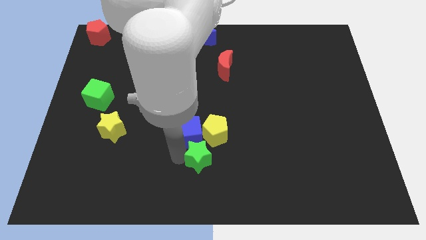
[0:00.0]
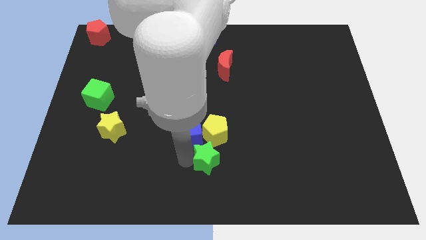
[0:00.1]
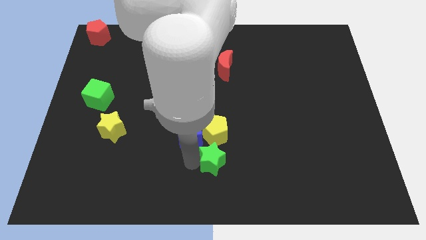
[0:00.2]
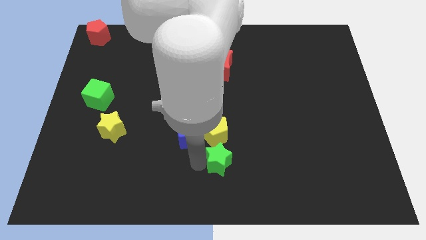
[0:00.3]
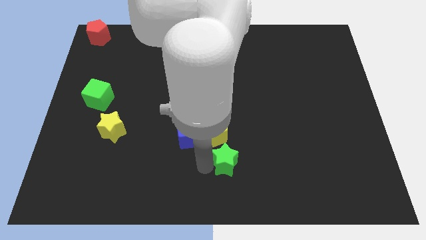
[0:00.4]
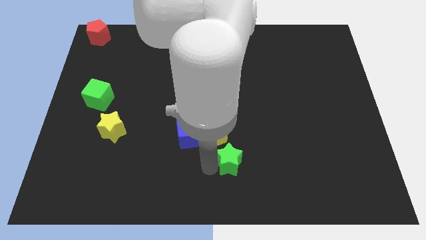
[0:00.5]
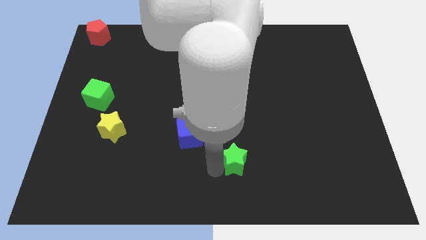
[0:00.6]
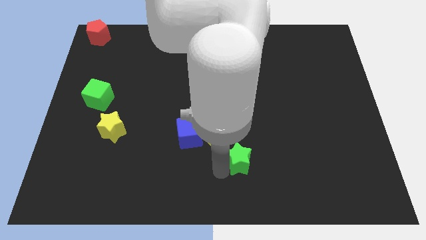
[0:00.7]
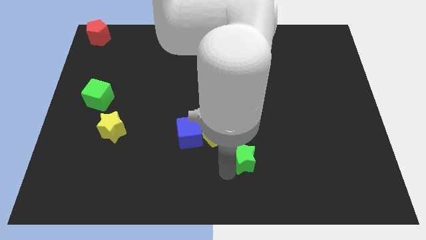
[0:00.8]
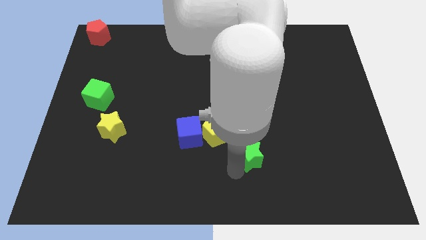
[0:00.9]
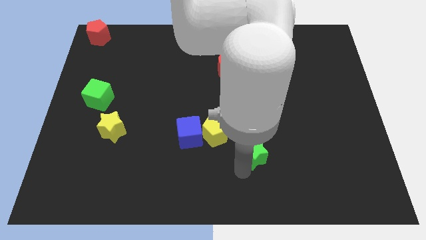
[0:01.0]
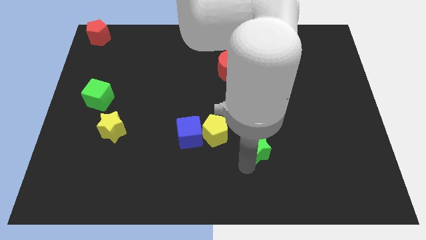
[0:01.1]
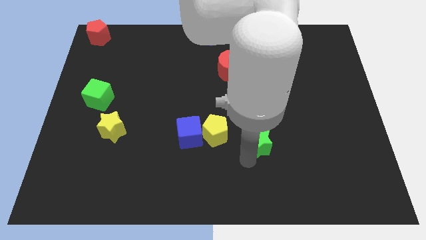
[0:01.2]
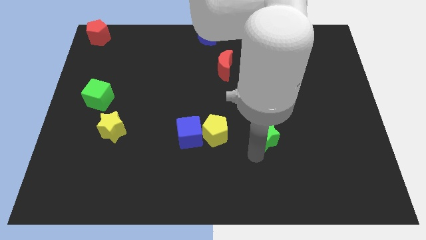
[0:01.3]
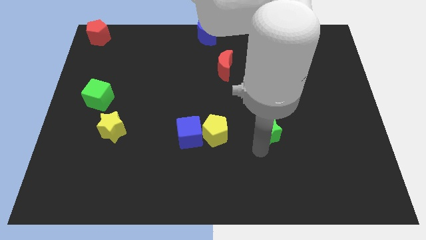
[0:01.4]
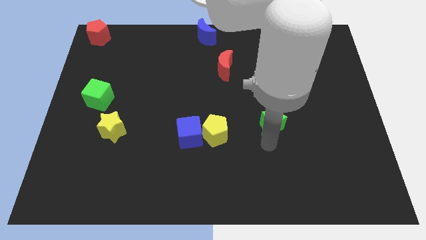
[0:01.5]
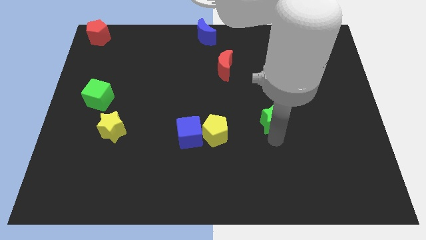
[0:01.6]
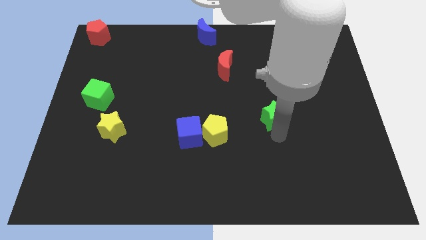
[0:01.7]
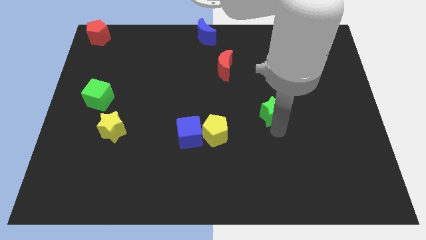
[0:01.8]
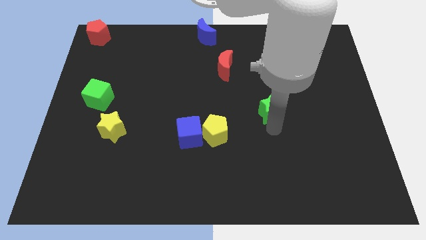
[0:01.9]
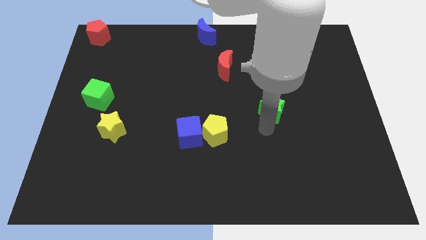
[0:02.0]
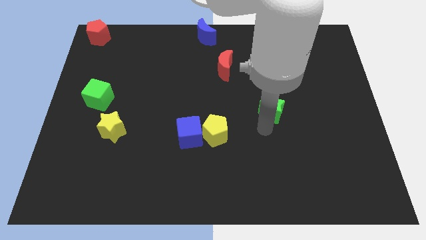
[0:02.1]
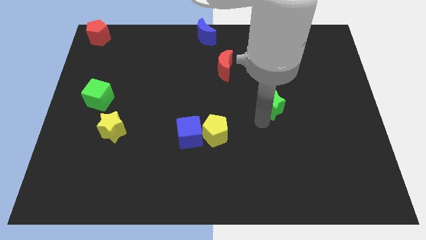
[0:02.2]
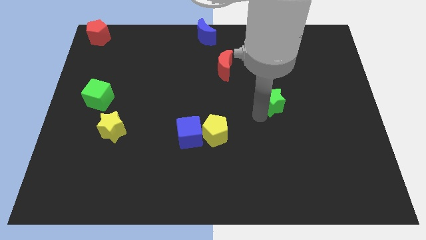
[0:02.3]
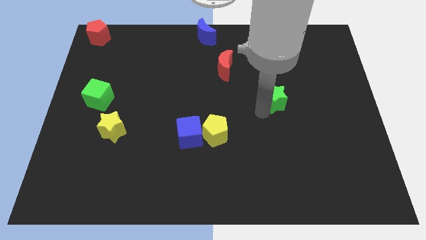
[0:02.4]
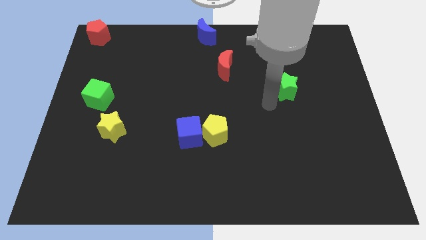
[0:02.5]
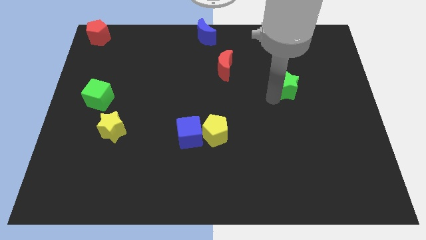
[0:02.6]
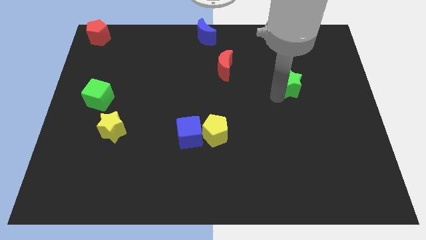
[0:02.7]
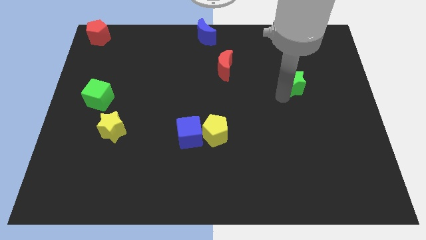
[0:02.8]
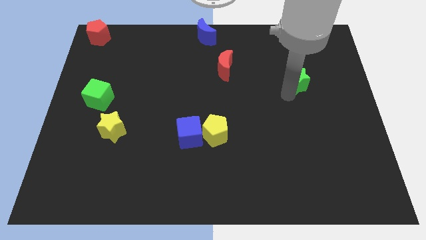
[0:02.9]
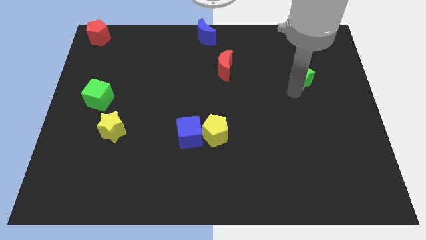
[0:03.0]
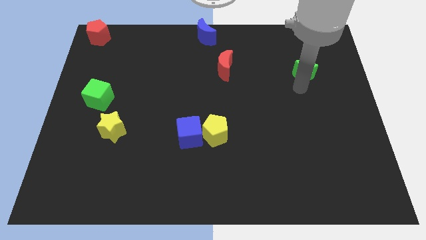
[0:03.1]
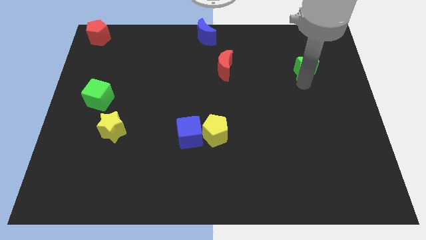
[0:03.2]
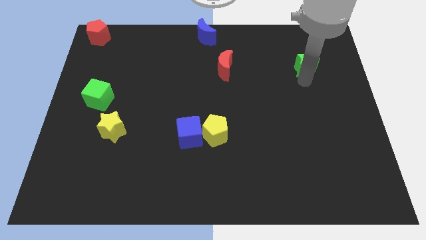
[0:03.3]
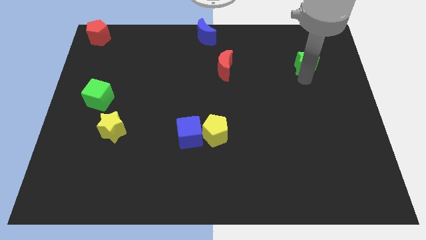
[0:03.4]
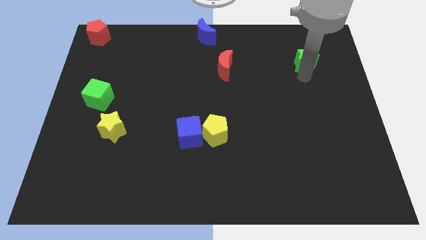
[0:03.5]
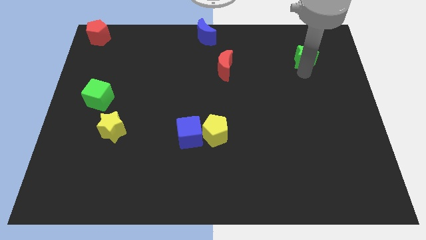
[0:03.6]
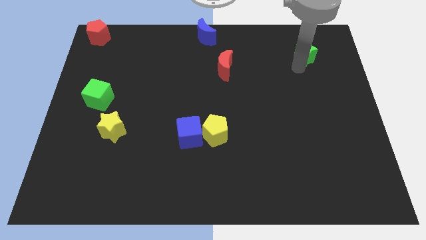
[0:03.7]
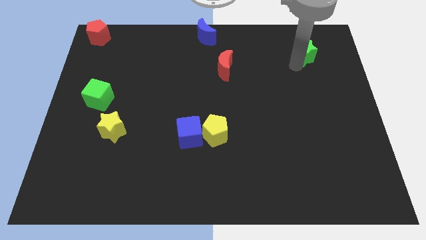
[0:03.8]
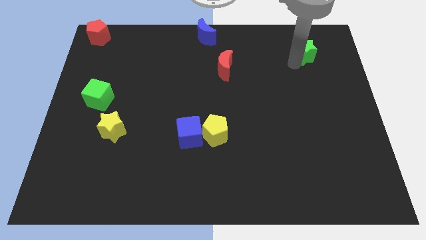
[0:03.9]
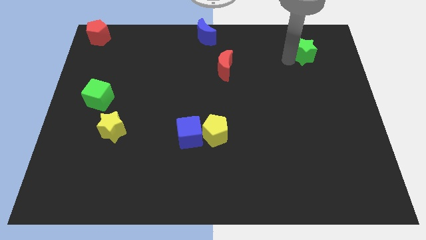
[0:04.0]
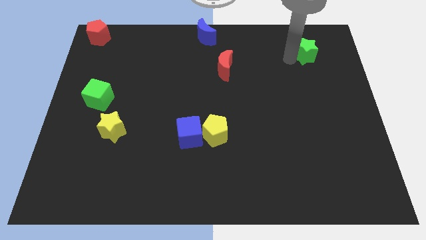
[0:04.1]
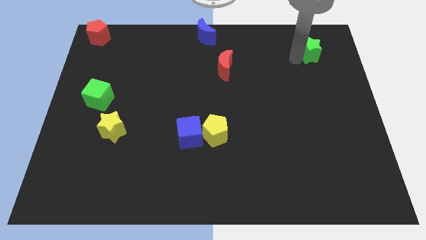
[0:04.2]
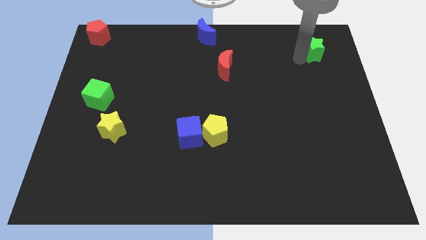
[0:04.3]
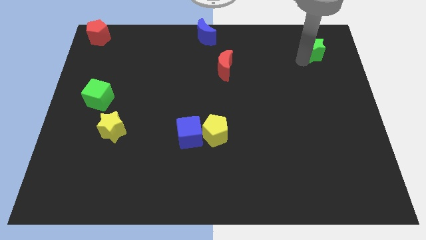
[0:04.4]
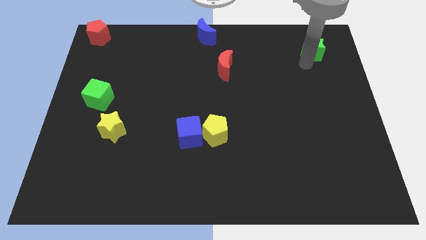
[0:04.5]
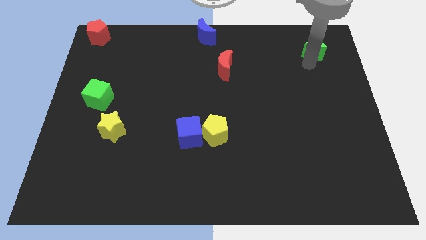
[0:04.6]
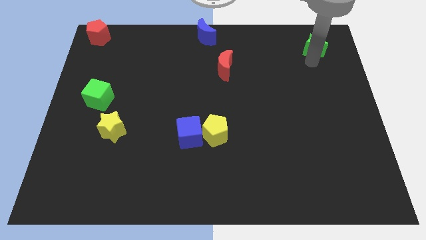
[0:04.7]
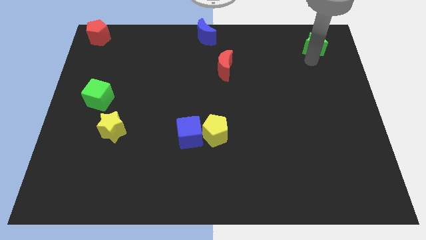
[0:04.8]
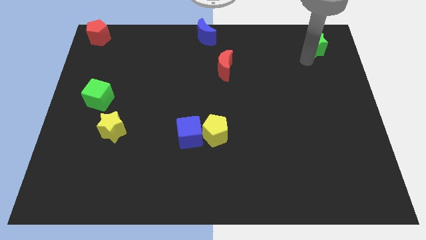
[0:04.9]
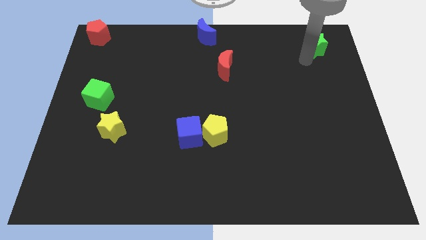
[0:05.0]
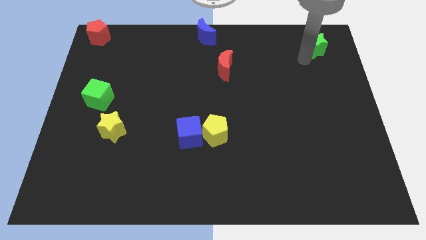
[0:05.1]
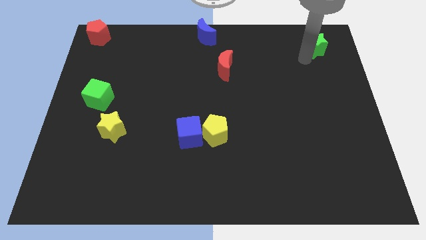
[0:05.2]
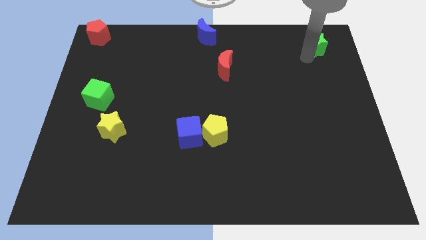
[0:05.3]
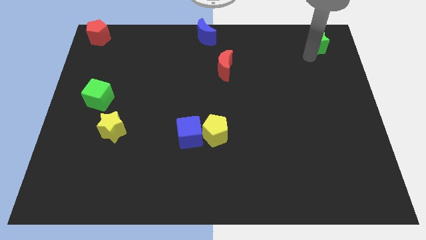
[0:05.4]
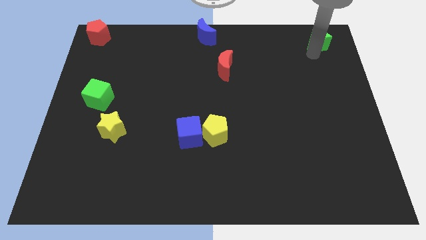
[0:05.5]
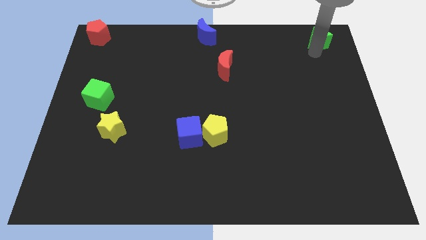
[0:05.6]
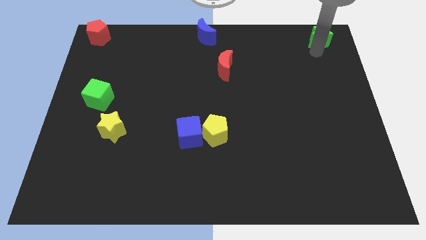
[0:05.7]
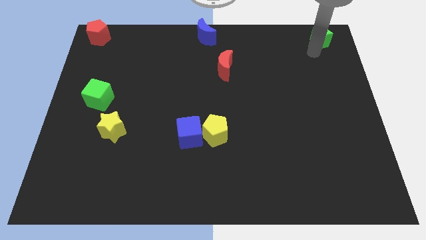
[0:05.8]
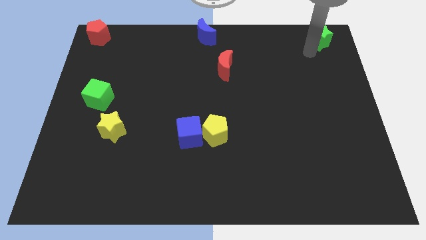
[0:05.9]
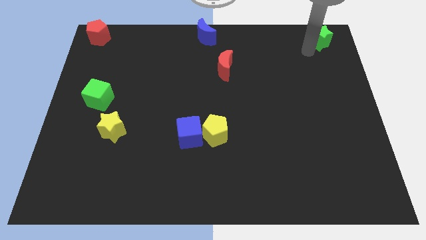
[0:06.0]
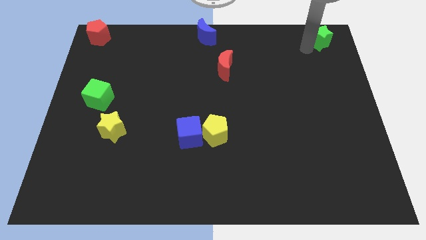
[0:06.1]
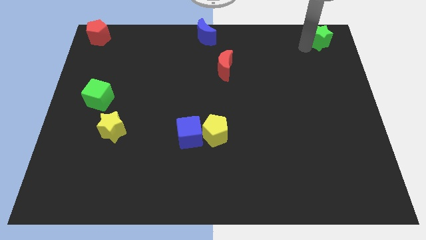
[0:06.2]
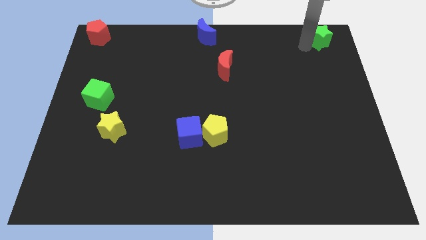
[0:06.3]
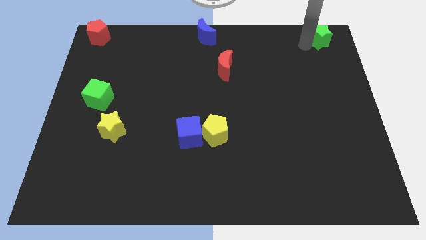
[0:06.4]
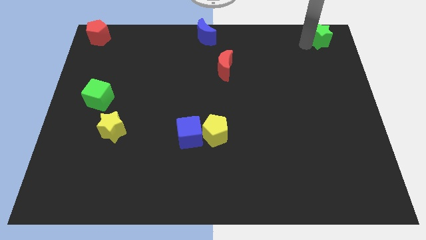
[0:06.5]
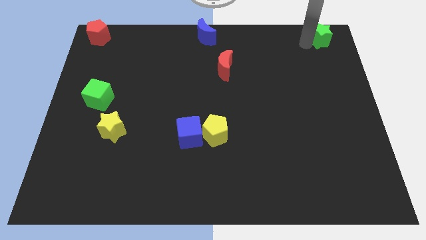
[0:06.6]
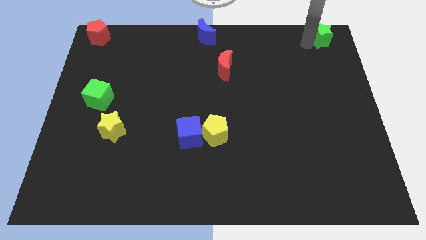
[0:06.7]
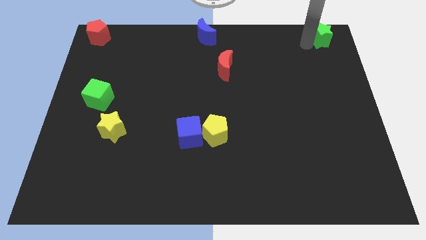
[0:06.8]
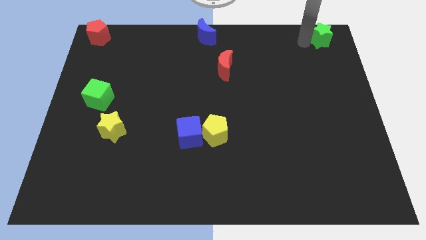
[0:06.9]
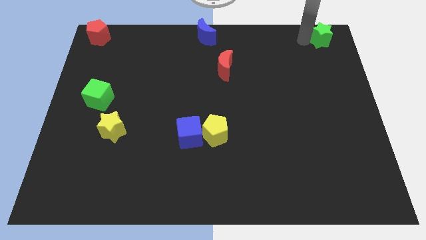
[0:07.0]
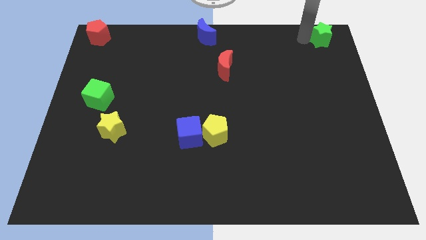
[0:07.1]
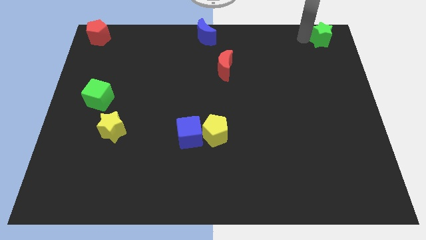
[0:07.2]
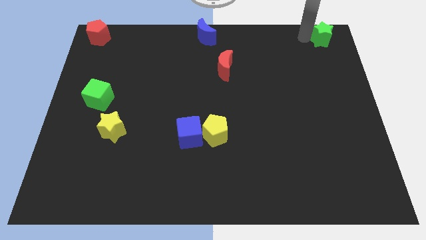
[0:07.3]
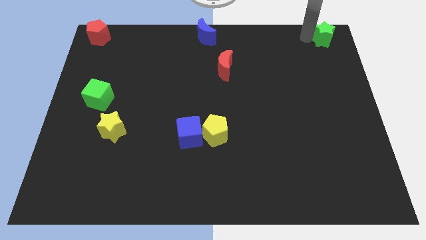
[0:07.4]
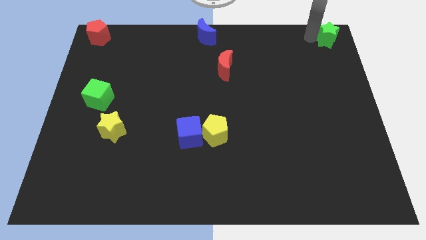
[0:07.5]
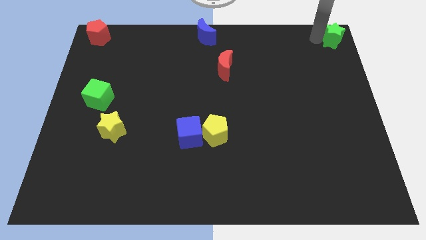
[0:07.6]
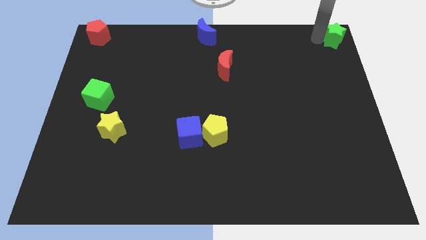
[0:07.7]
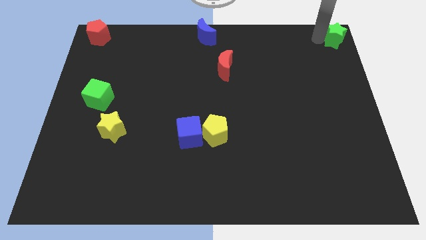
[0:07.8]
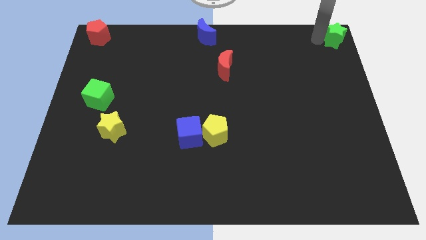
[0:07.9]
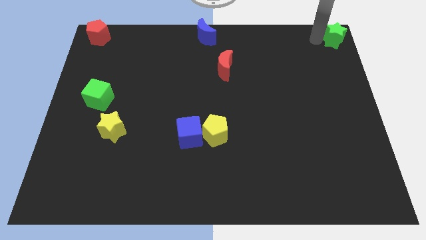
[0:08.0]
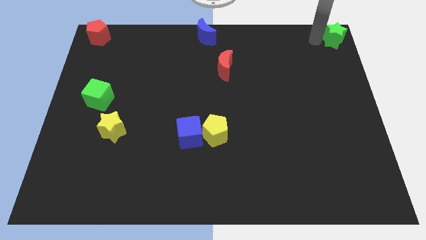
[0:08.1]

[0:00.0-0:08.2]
move the green star to the top right corner on the board

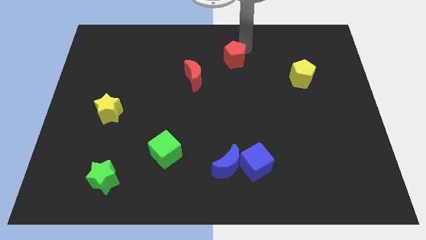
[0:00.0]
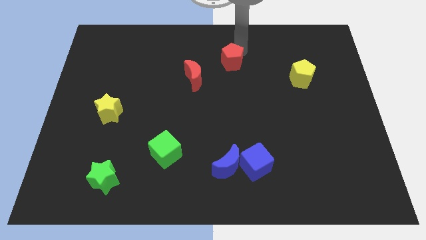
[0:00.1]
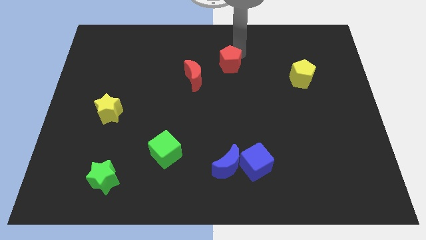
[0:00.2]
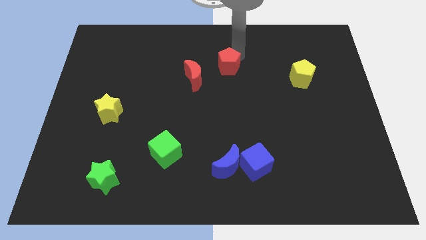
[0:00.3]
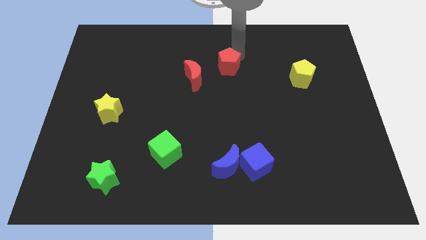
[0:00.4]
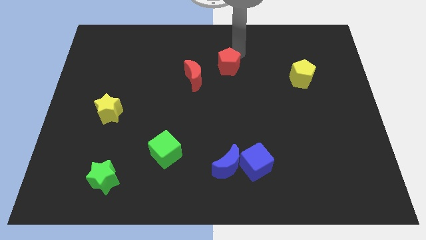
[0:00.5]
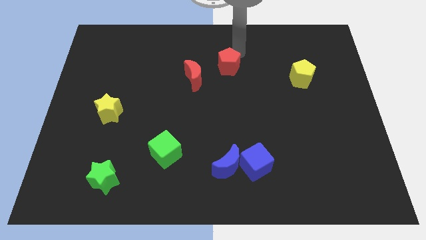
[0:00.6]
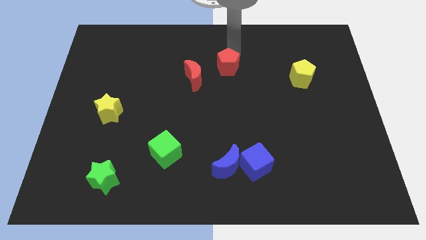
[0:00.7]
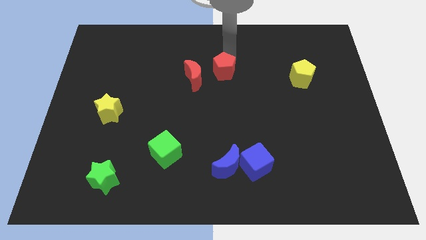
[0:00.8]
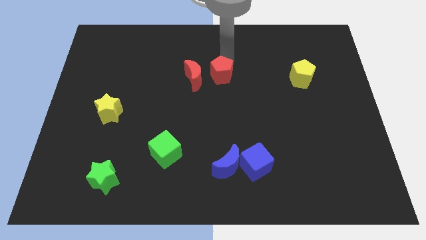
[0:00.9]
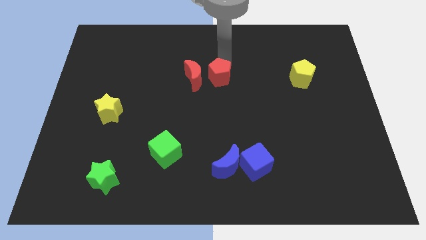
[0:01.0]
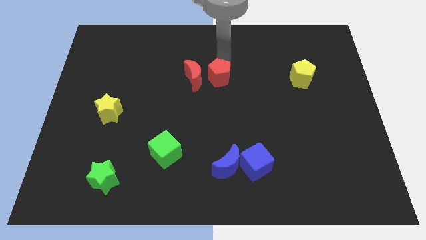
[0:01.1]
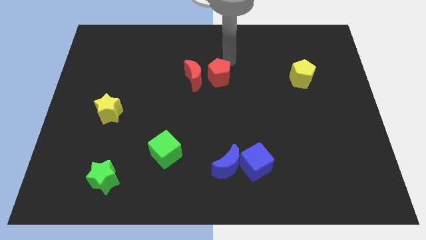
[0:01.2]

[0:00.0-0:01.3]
move red pentagon adjacent to red crescent
